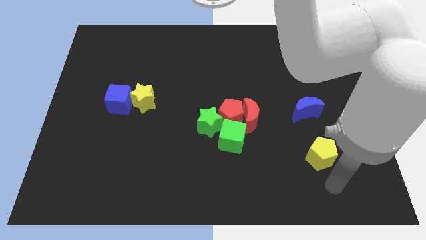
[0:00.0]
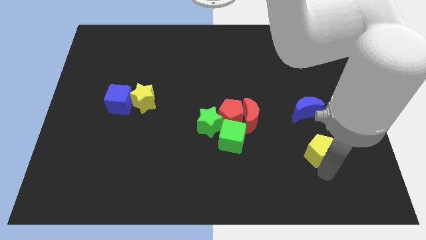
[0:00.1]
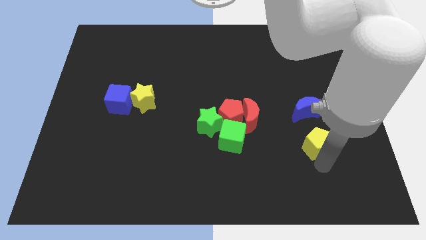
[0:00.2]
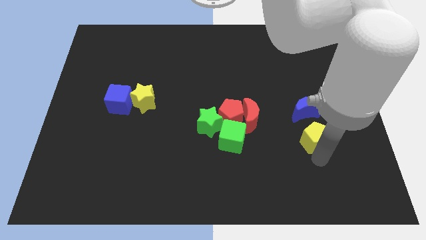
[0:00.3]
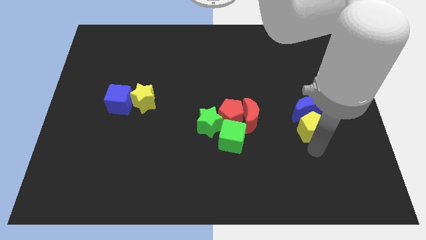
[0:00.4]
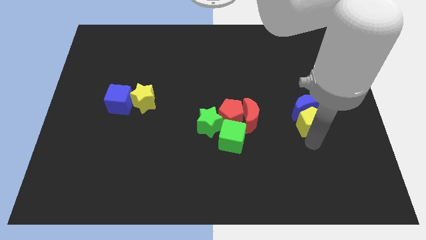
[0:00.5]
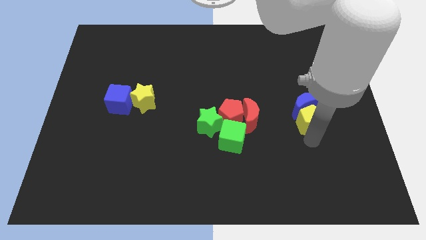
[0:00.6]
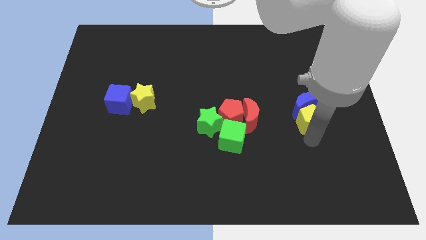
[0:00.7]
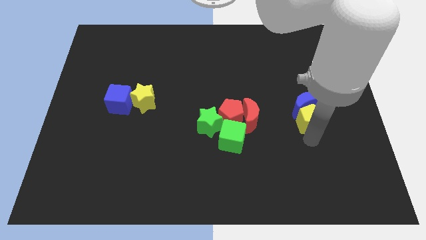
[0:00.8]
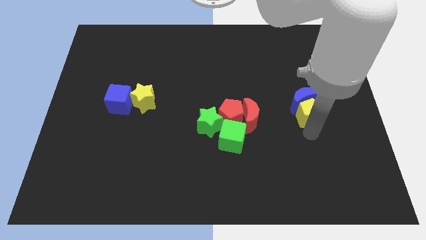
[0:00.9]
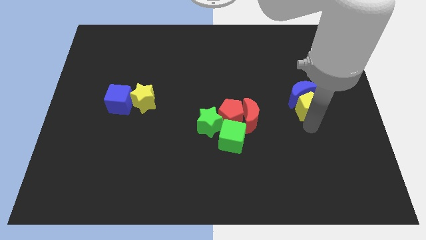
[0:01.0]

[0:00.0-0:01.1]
slide yellow pentagon into blue moon

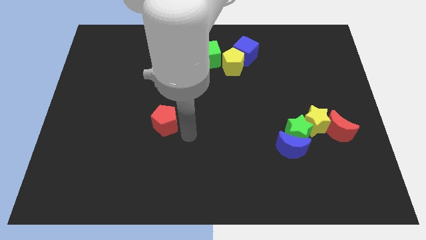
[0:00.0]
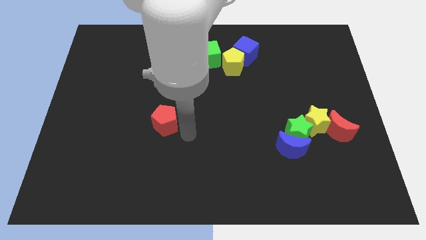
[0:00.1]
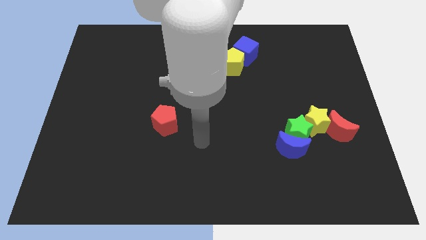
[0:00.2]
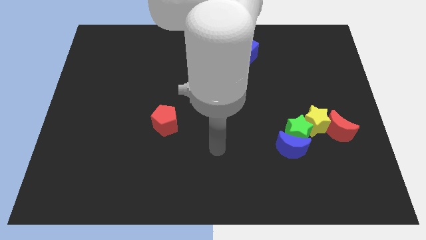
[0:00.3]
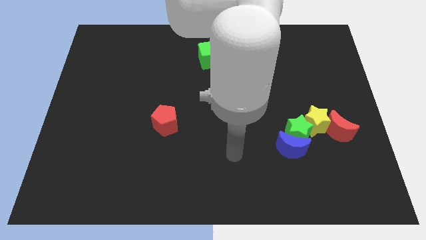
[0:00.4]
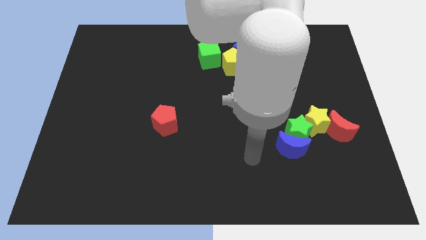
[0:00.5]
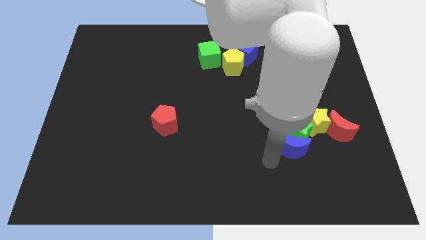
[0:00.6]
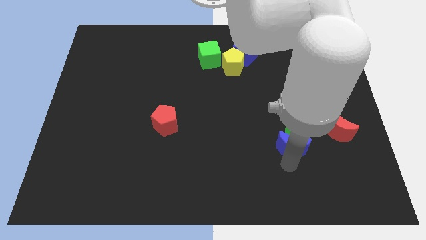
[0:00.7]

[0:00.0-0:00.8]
move the arm to the bottom of the red crescent

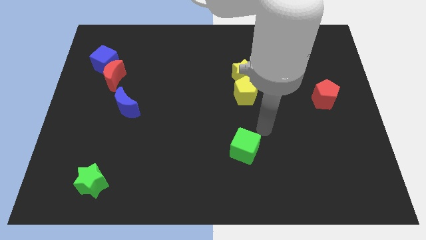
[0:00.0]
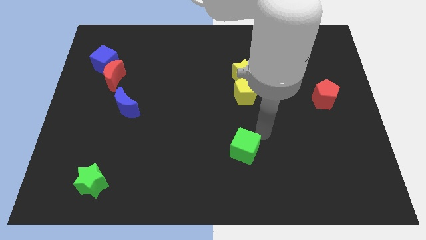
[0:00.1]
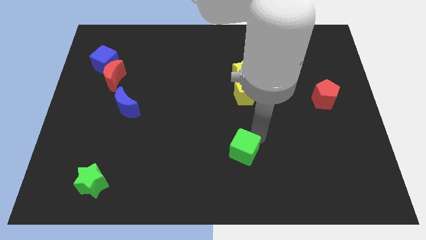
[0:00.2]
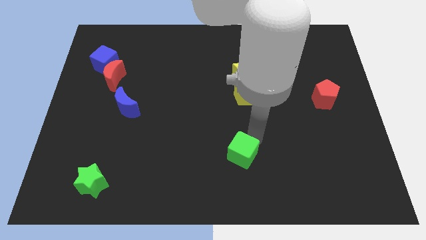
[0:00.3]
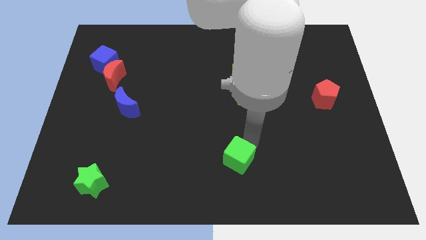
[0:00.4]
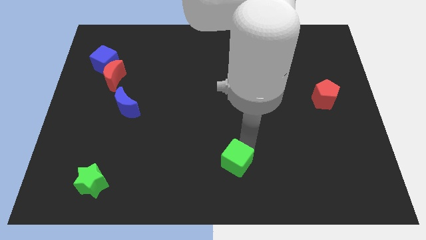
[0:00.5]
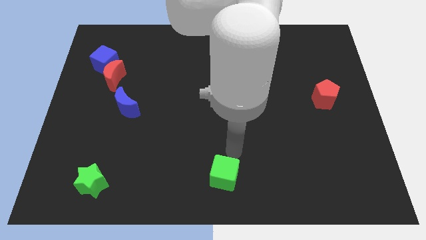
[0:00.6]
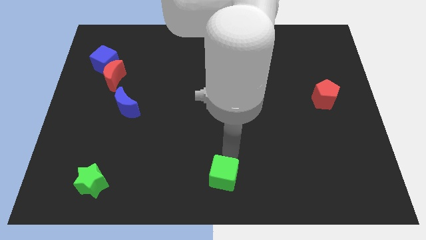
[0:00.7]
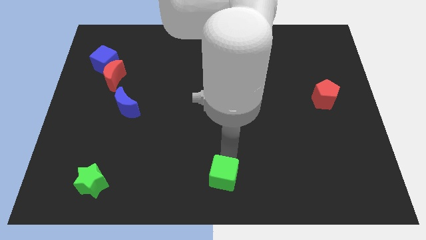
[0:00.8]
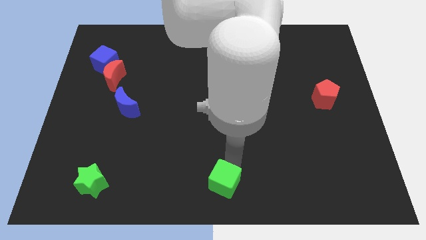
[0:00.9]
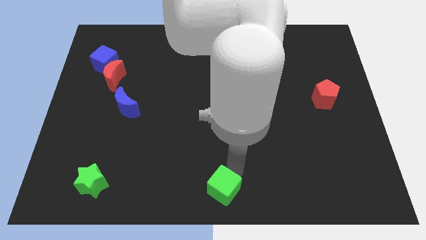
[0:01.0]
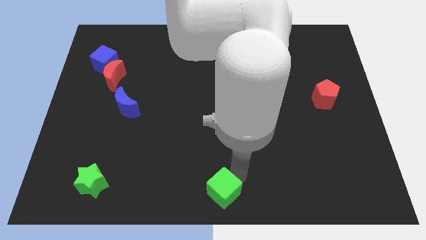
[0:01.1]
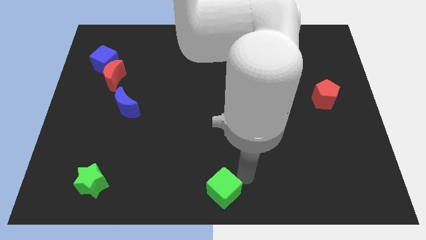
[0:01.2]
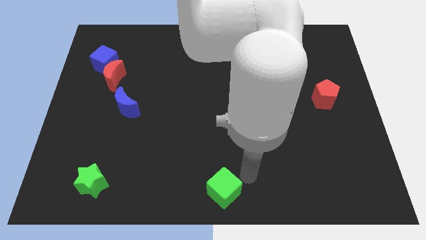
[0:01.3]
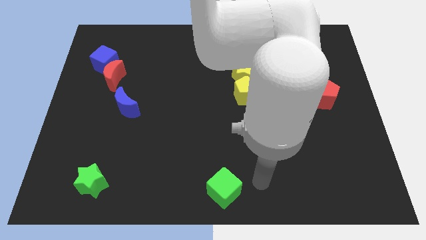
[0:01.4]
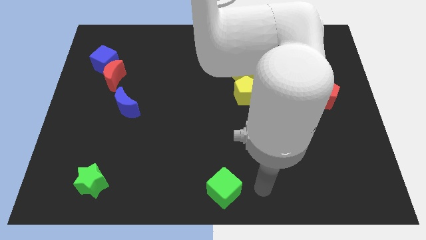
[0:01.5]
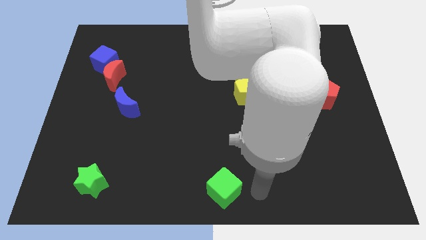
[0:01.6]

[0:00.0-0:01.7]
move the green cube to the bottom center

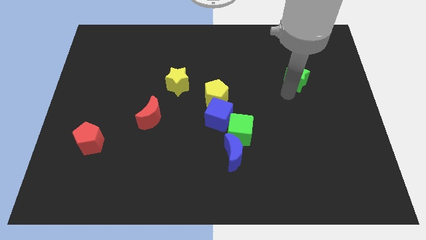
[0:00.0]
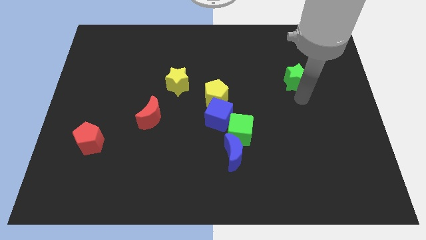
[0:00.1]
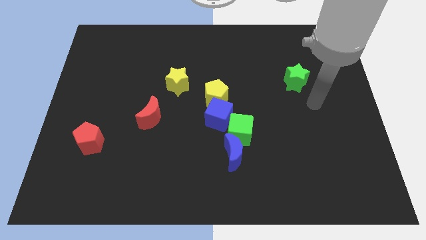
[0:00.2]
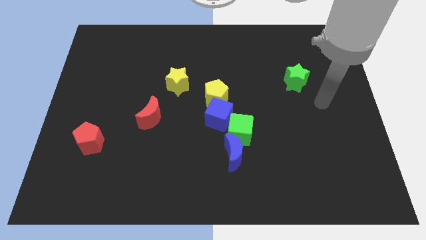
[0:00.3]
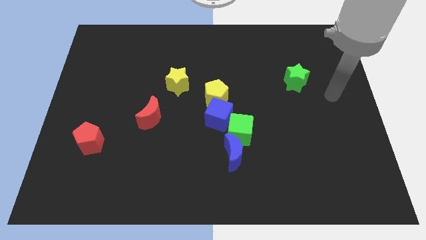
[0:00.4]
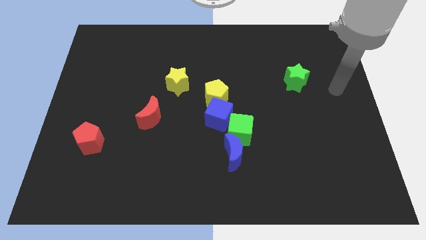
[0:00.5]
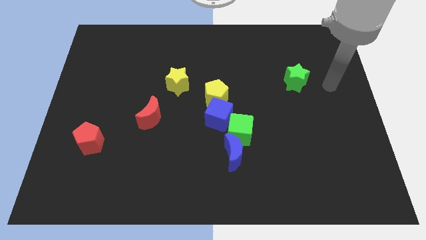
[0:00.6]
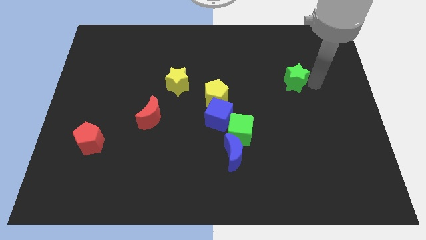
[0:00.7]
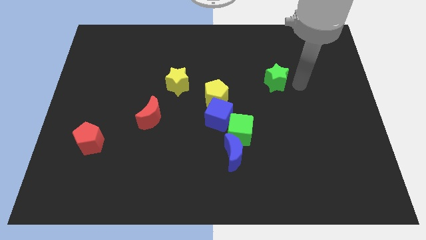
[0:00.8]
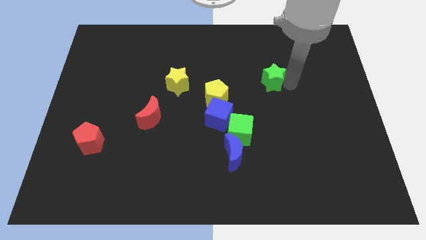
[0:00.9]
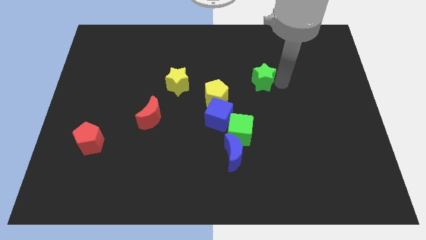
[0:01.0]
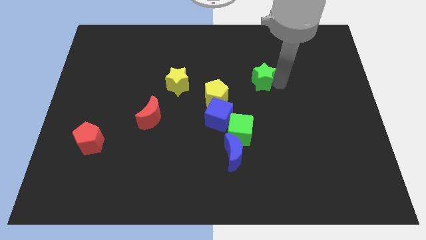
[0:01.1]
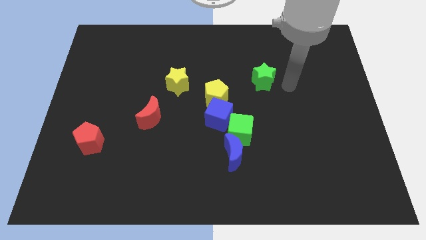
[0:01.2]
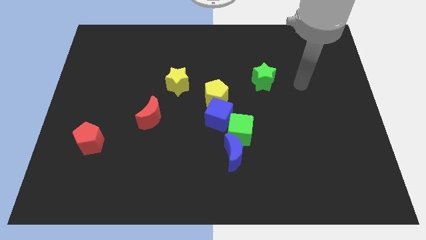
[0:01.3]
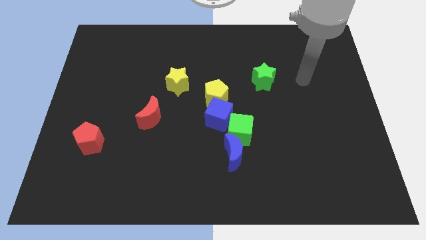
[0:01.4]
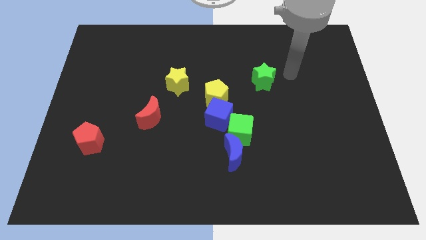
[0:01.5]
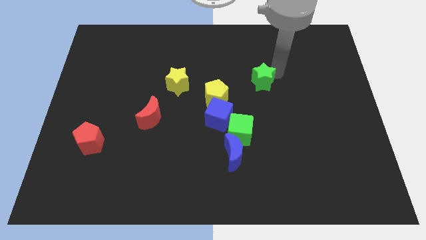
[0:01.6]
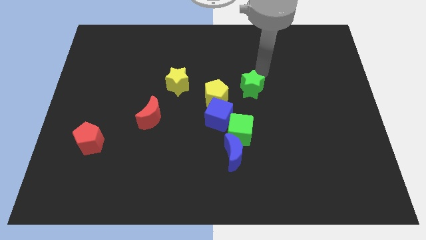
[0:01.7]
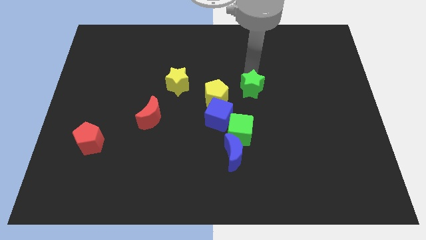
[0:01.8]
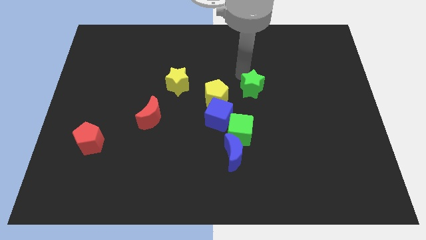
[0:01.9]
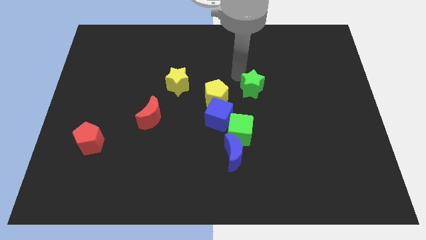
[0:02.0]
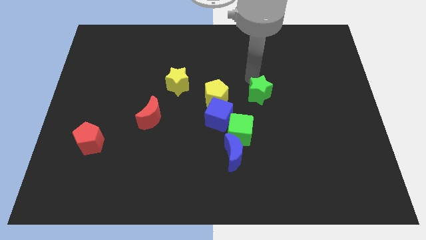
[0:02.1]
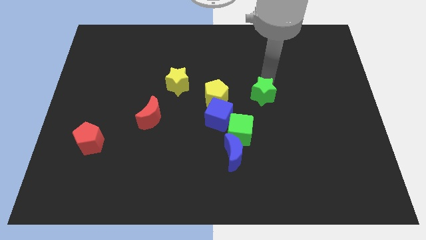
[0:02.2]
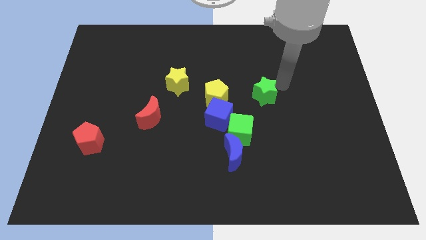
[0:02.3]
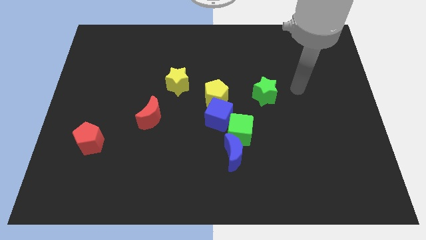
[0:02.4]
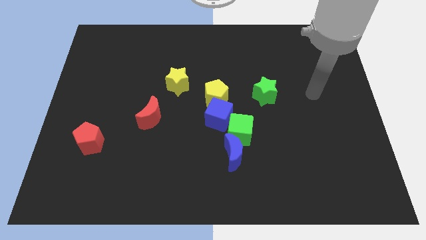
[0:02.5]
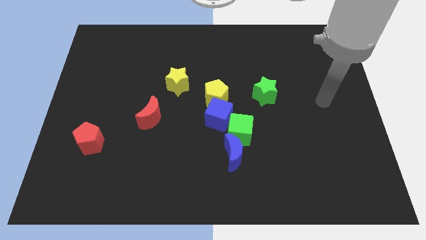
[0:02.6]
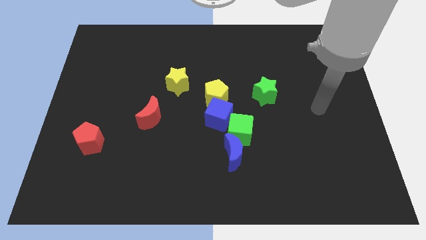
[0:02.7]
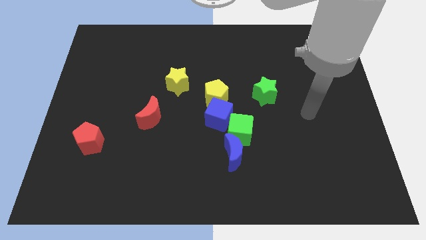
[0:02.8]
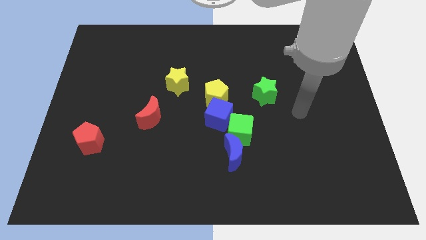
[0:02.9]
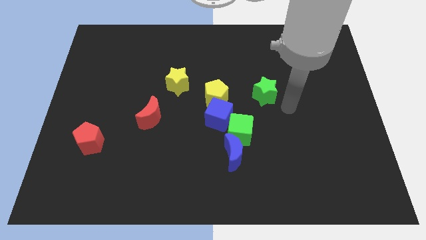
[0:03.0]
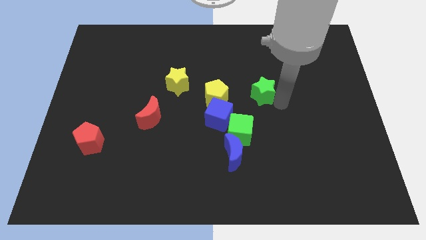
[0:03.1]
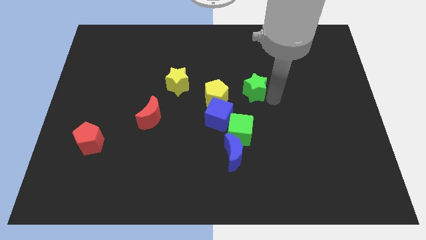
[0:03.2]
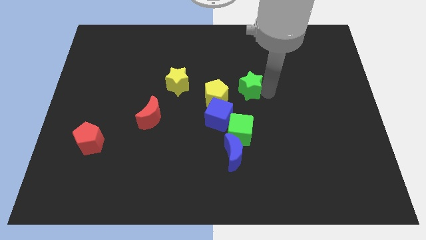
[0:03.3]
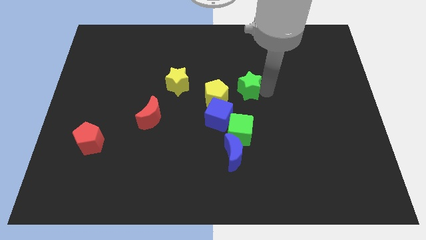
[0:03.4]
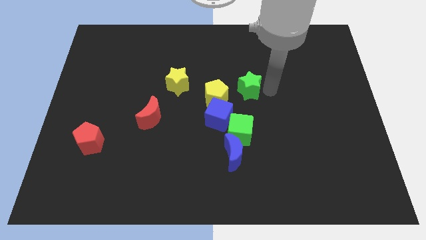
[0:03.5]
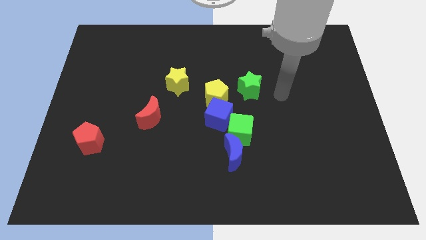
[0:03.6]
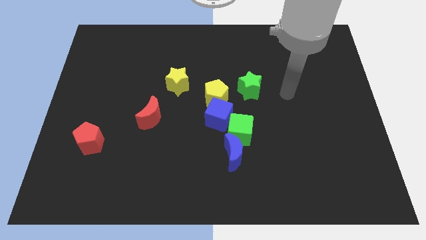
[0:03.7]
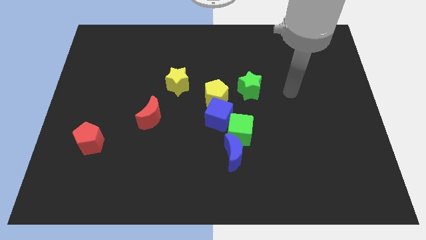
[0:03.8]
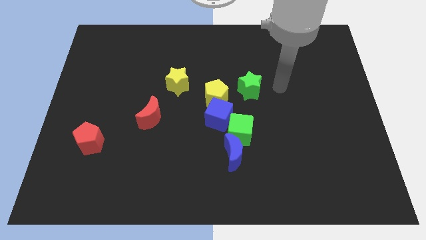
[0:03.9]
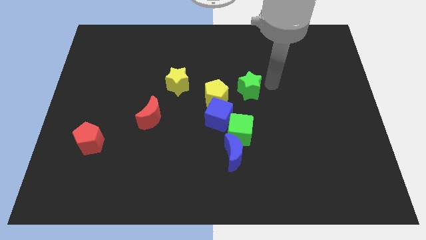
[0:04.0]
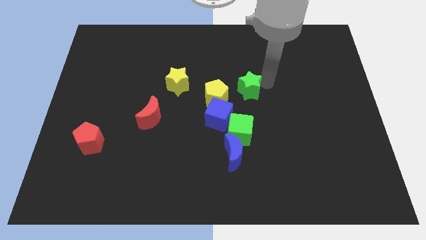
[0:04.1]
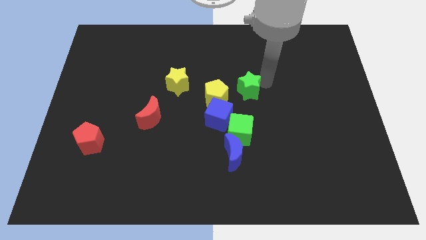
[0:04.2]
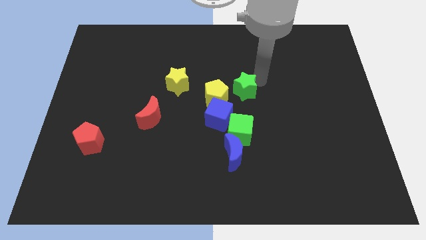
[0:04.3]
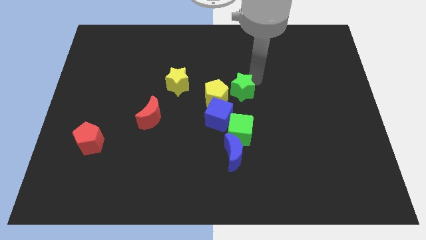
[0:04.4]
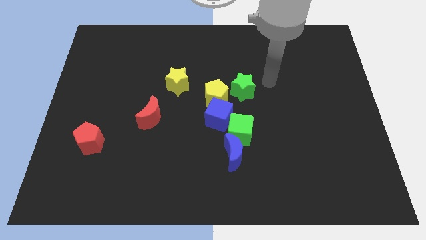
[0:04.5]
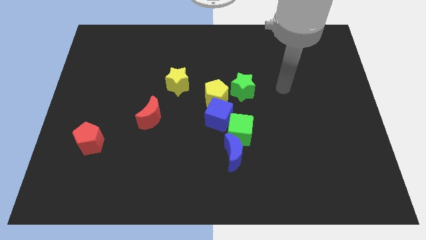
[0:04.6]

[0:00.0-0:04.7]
push the green star close to the yellow pentagon

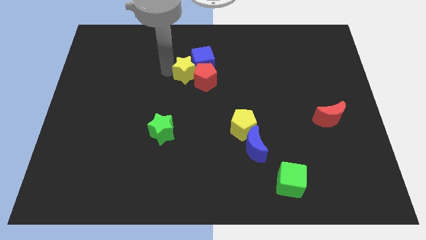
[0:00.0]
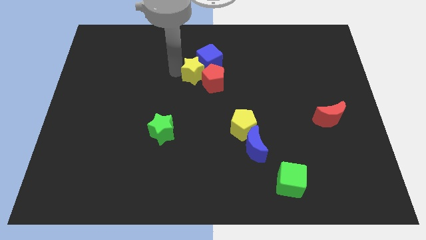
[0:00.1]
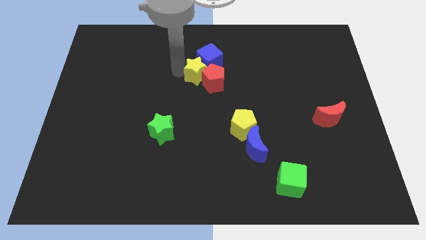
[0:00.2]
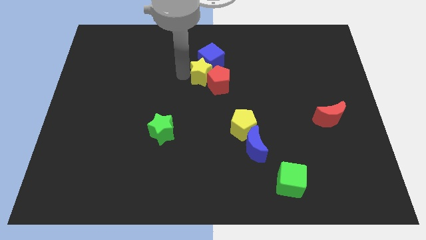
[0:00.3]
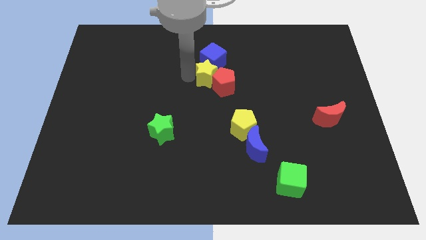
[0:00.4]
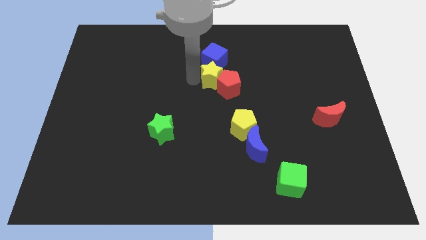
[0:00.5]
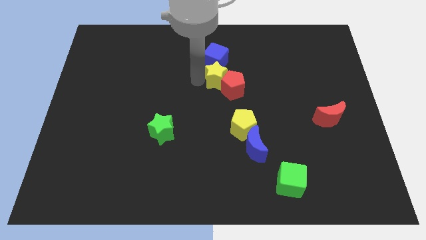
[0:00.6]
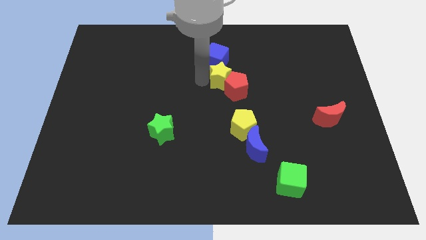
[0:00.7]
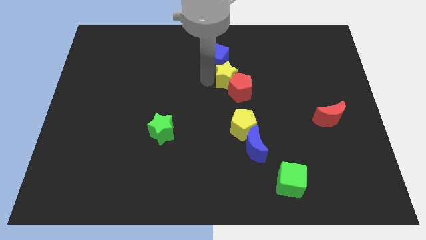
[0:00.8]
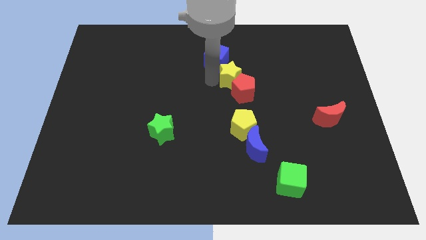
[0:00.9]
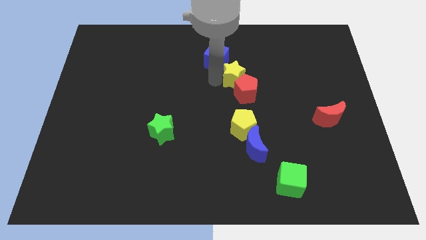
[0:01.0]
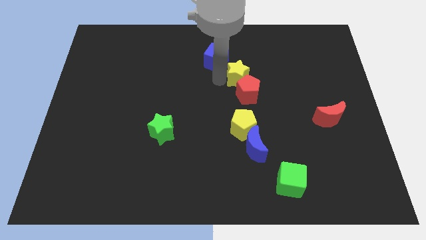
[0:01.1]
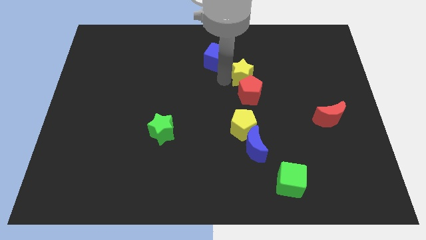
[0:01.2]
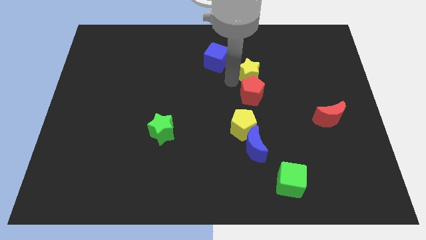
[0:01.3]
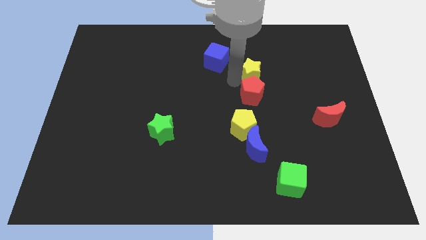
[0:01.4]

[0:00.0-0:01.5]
push the yellow star and red pentagon to the right side
